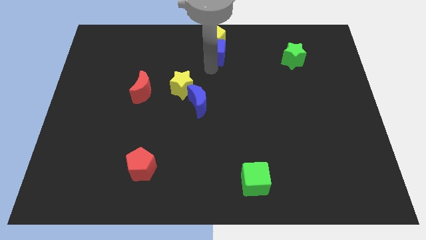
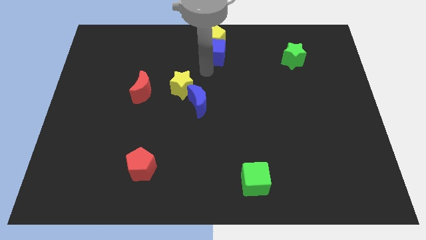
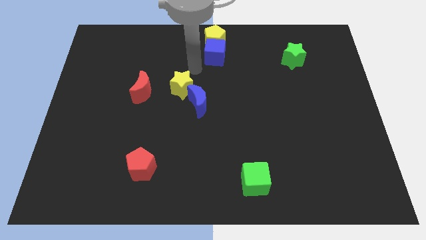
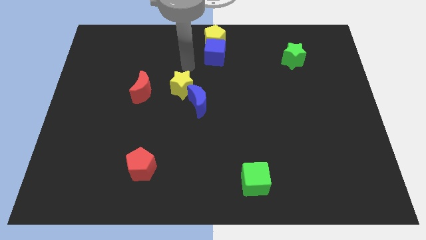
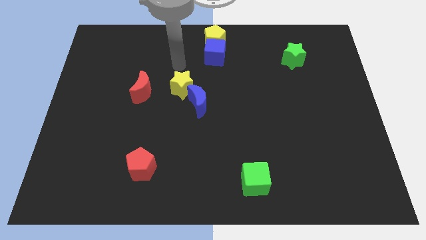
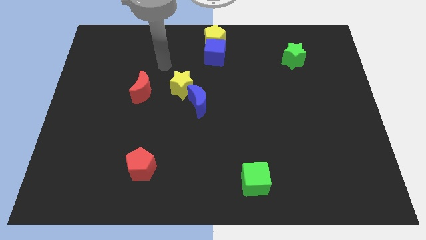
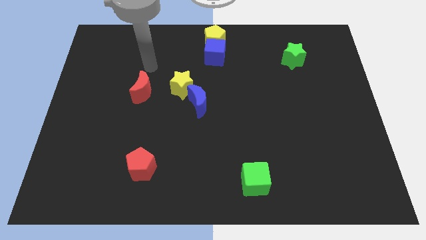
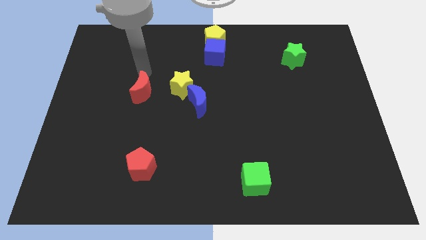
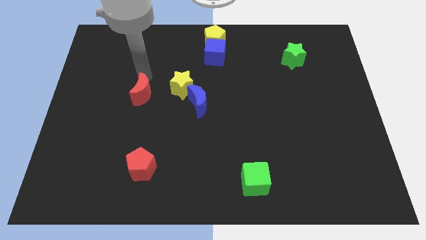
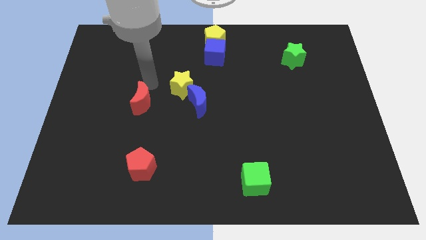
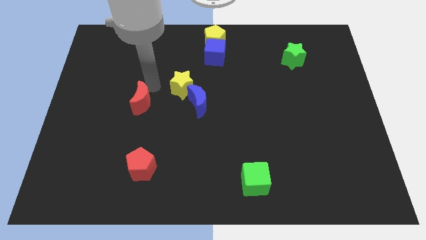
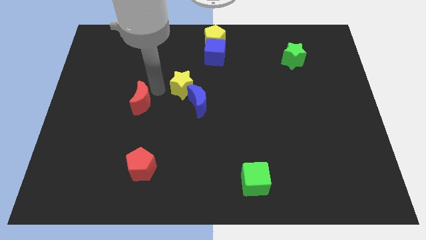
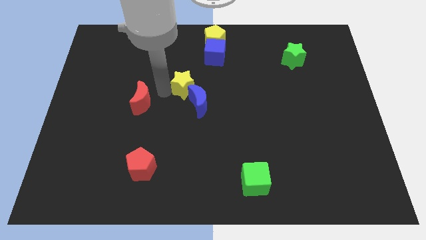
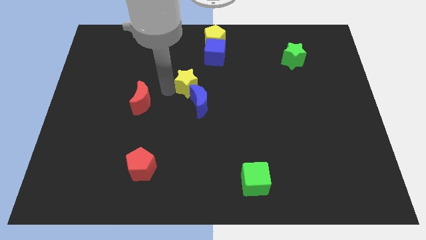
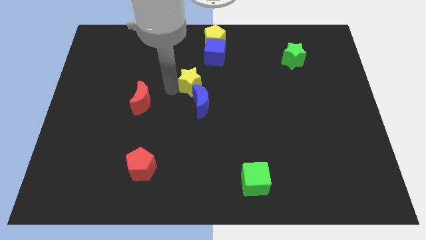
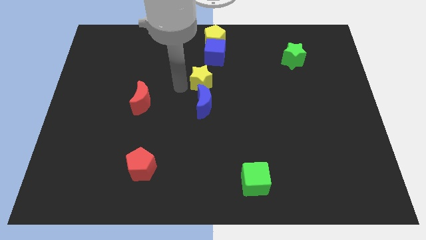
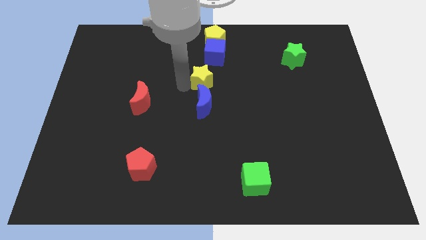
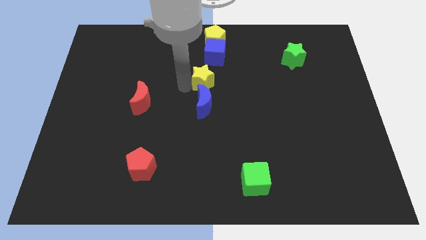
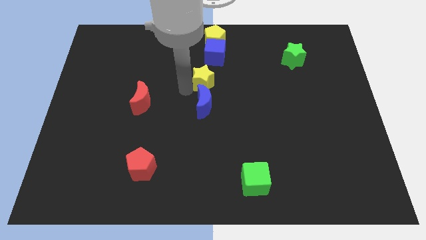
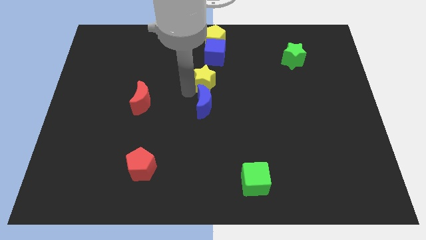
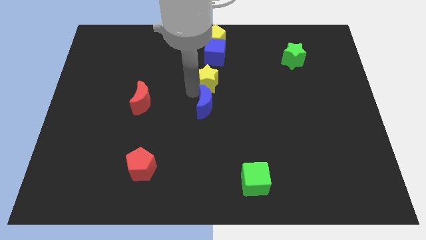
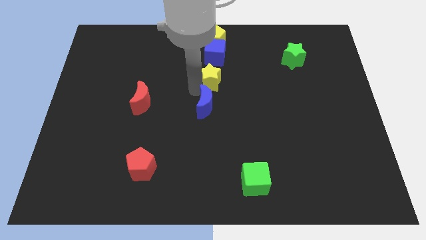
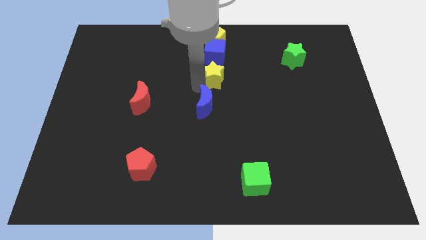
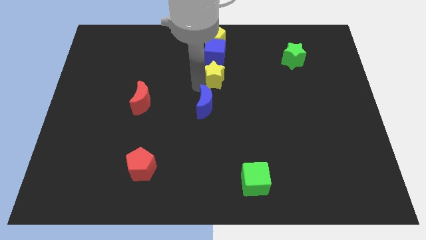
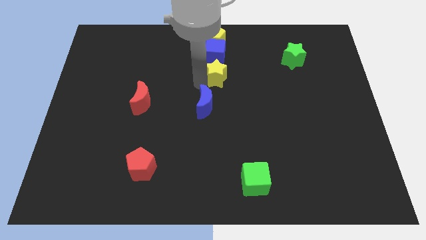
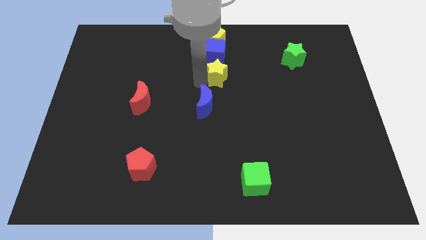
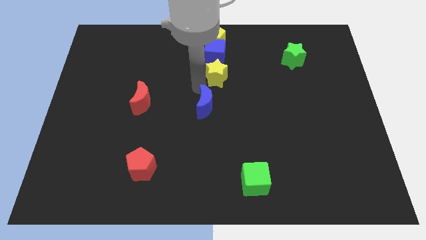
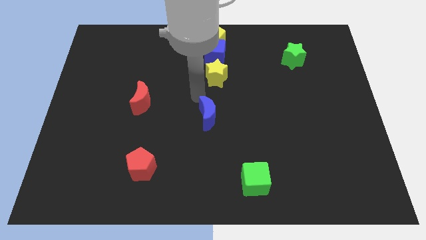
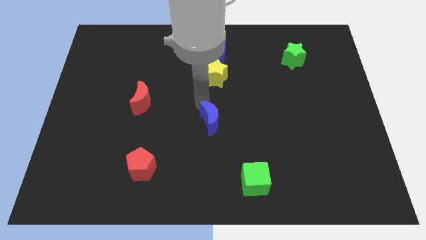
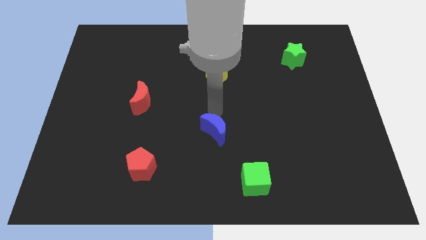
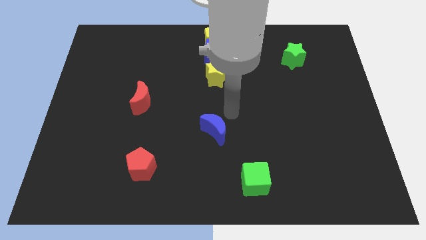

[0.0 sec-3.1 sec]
place the yellow star below the blue cube

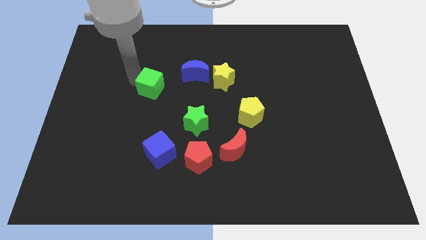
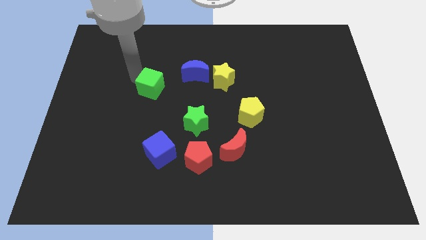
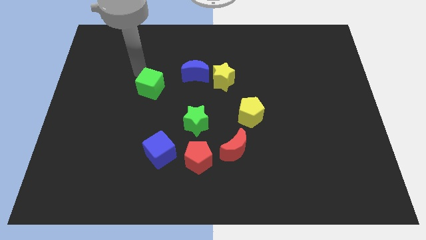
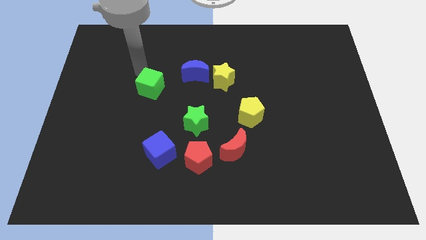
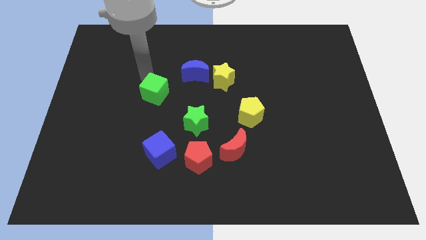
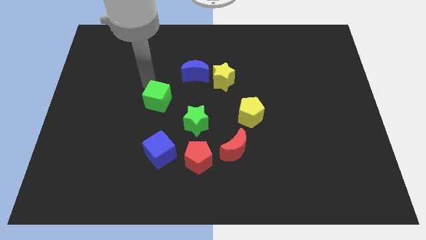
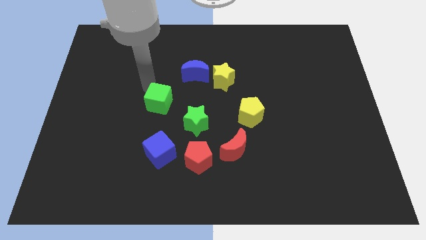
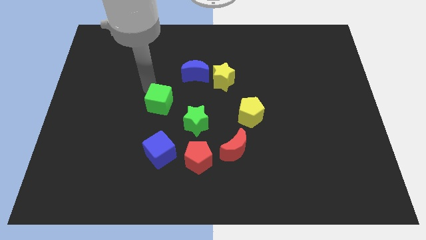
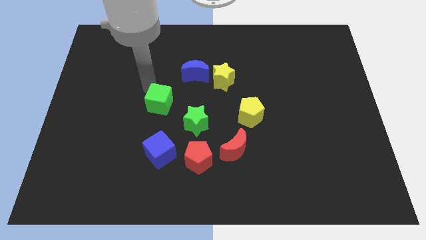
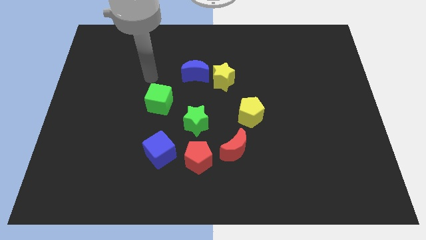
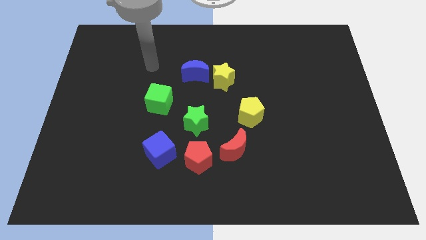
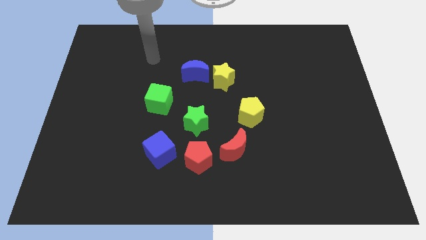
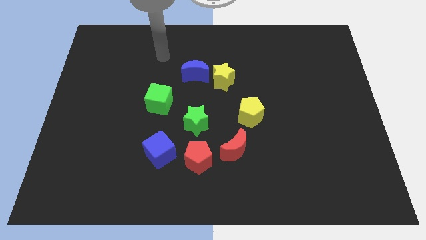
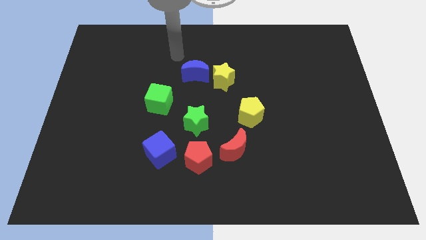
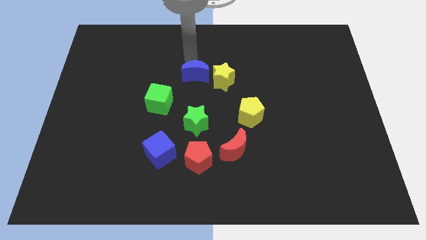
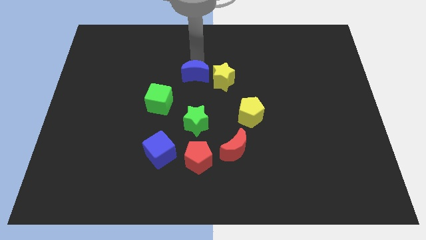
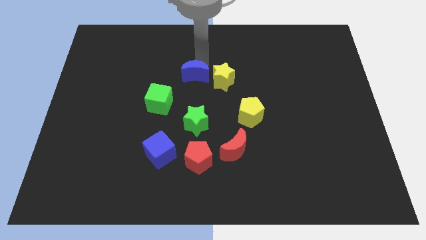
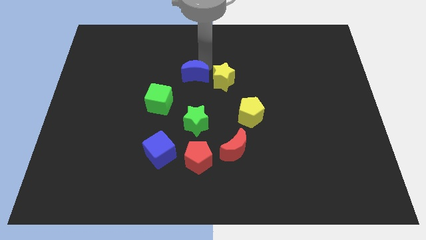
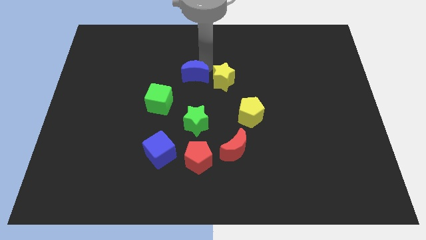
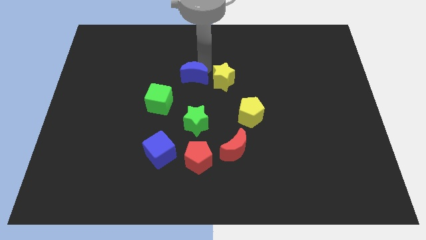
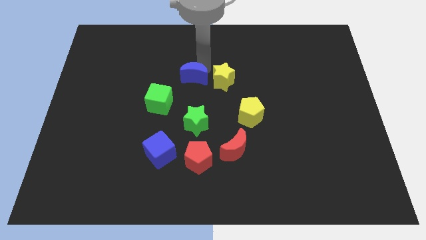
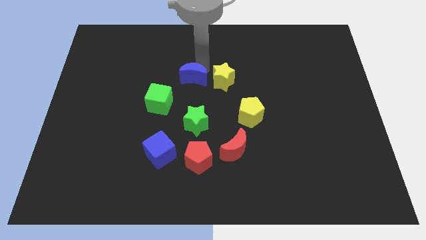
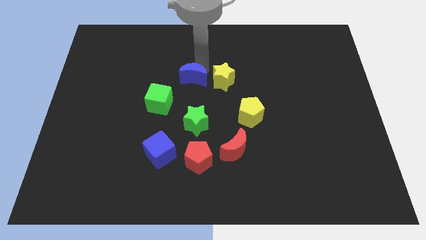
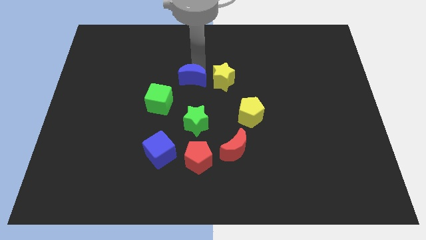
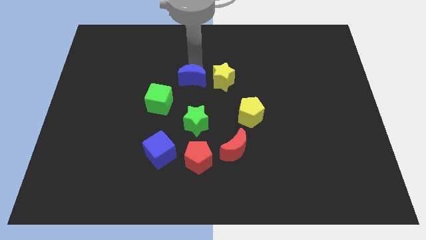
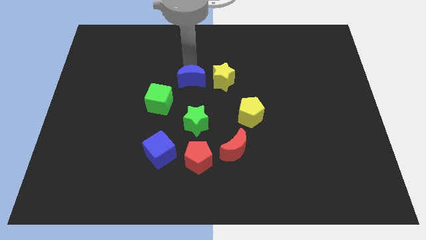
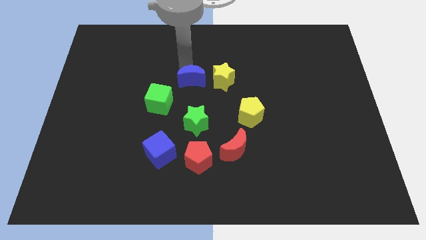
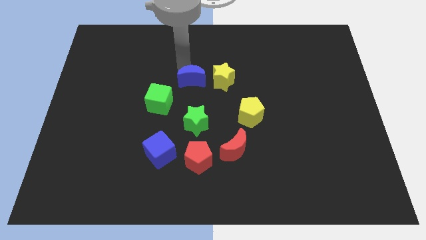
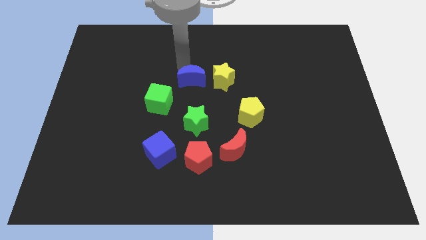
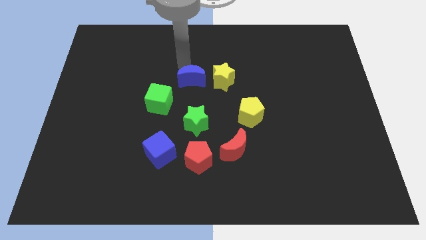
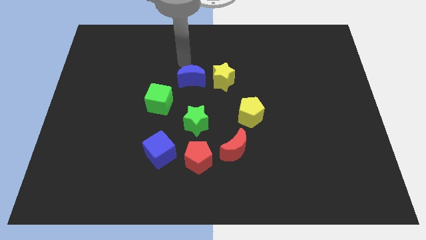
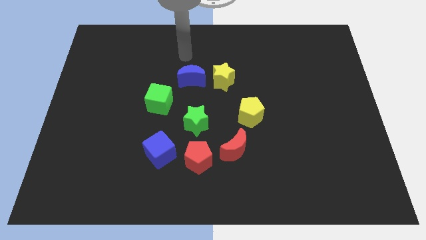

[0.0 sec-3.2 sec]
push the blue moon and the green cube close to each other

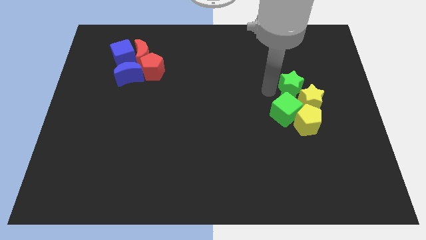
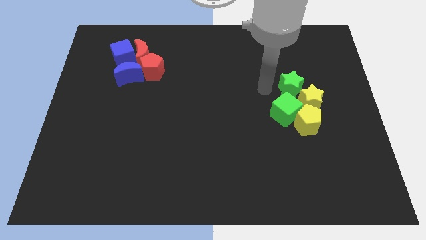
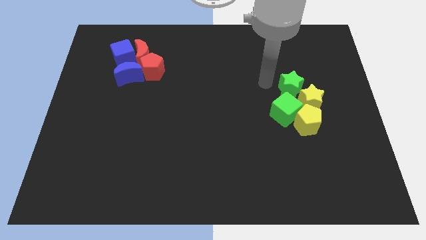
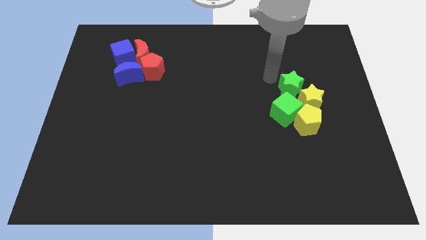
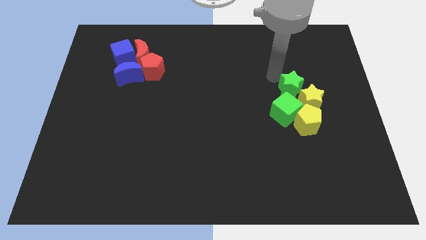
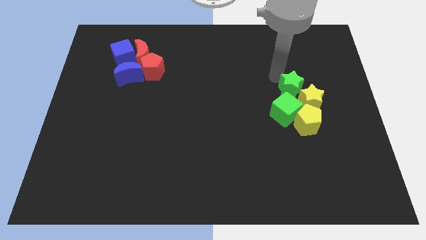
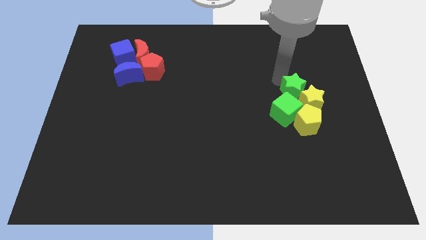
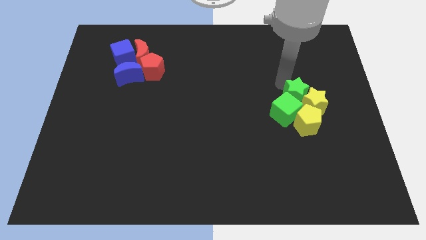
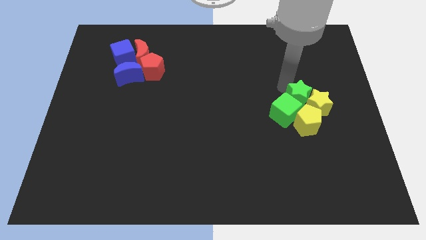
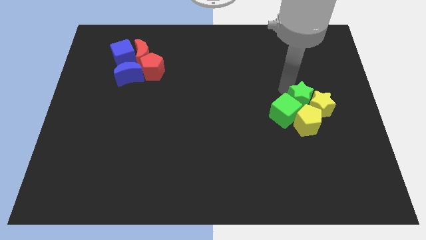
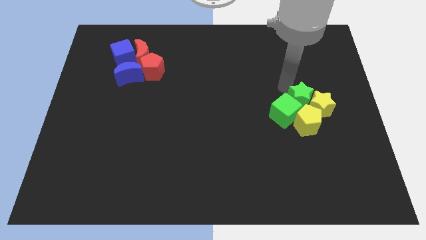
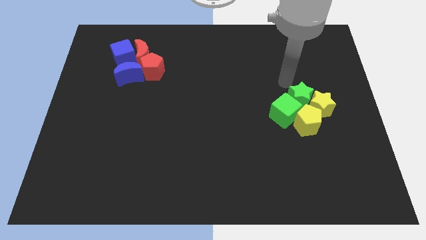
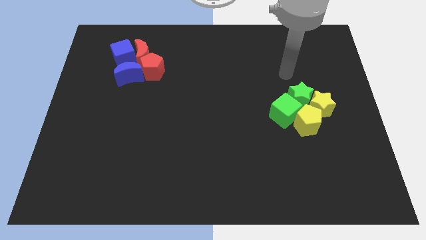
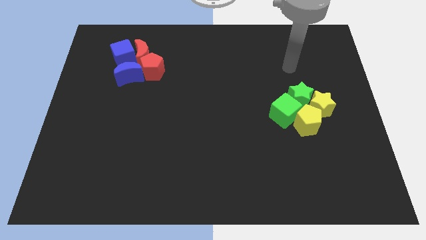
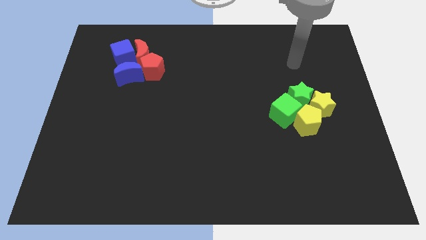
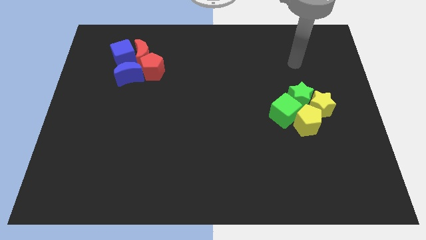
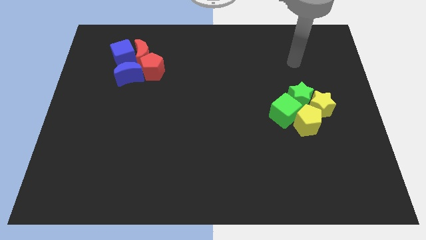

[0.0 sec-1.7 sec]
put the green star into the yellow star

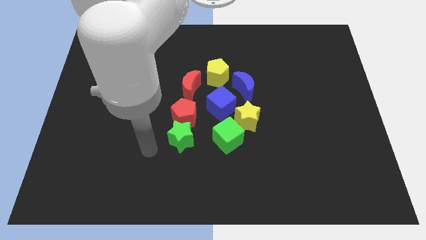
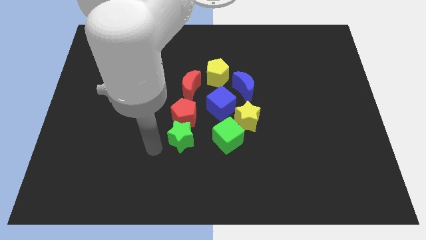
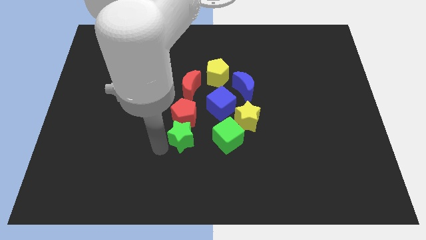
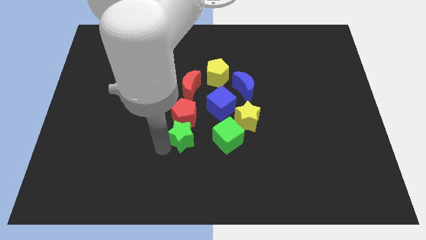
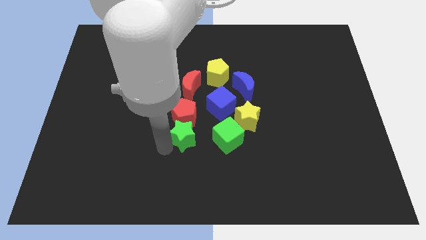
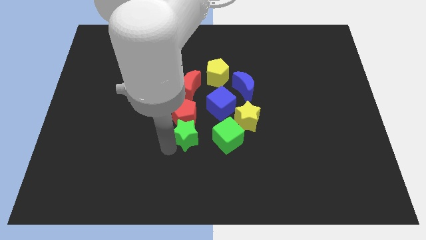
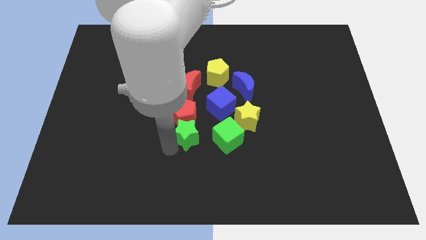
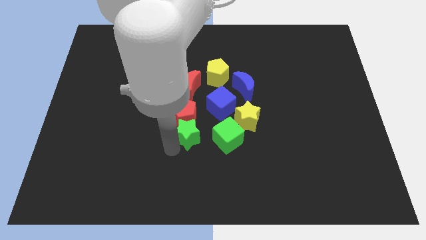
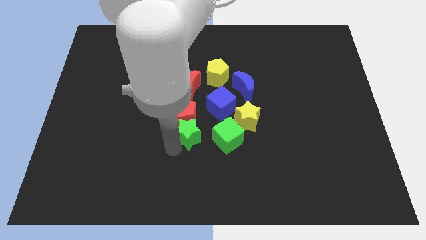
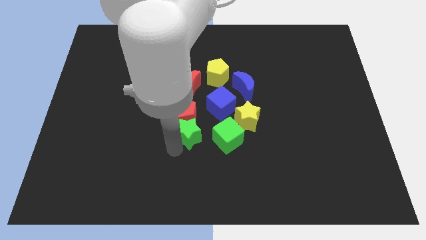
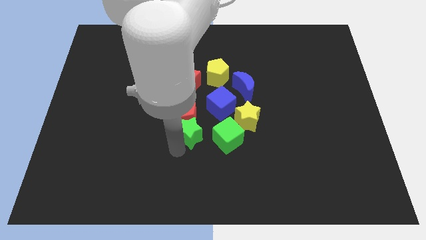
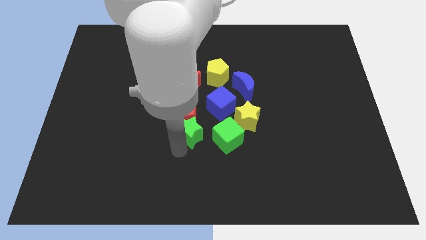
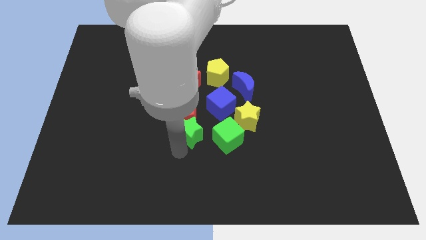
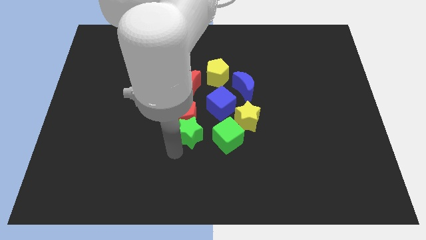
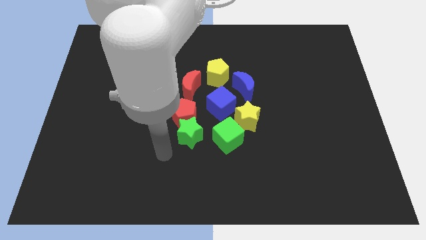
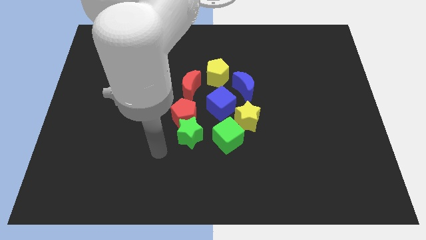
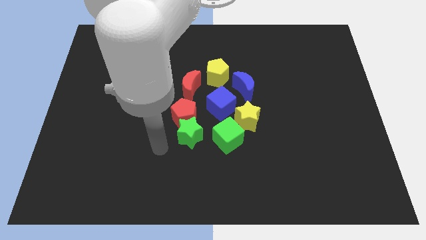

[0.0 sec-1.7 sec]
push the green star below the red pentagon
